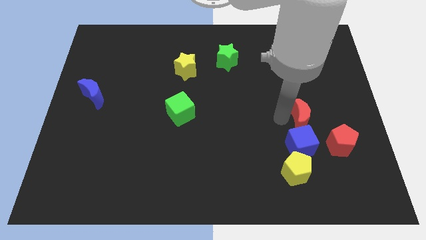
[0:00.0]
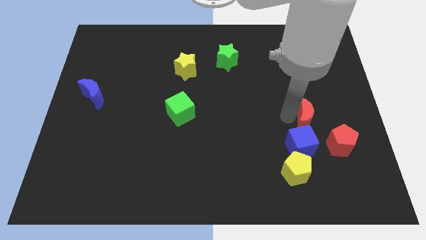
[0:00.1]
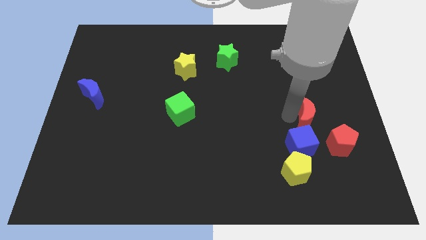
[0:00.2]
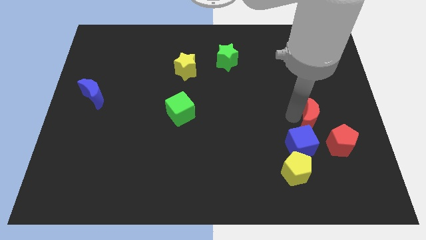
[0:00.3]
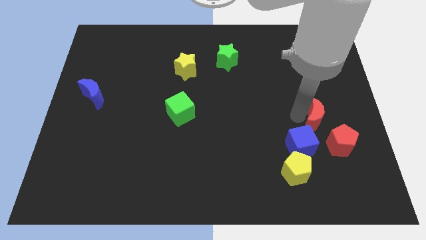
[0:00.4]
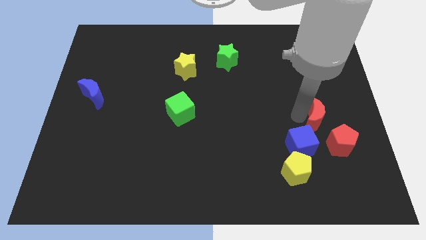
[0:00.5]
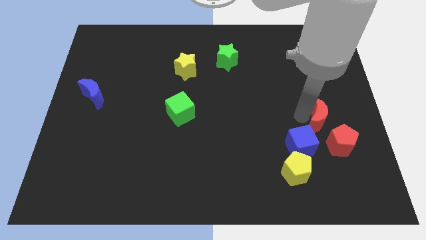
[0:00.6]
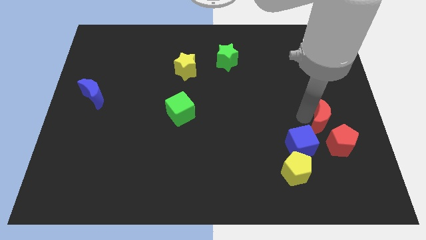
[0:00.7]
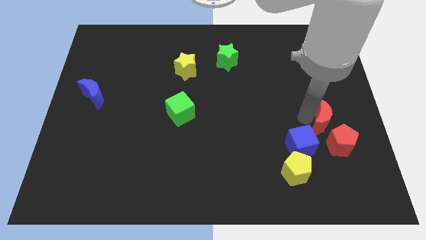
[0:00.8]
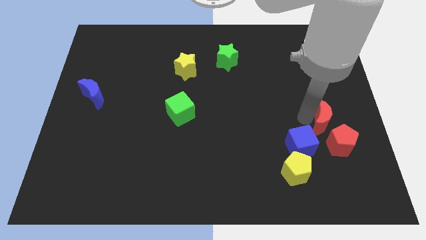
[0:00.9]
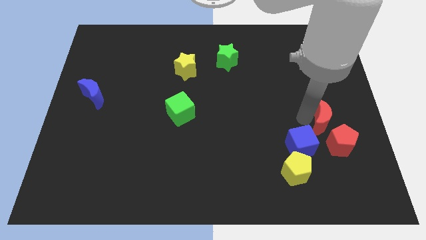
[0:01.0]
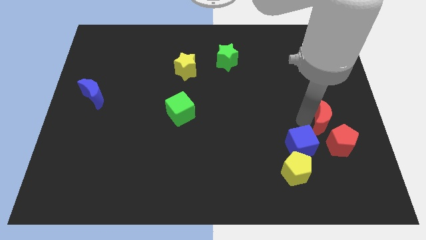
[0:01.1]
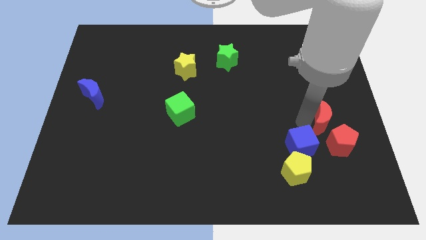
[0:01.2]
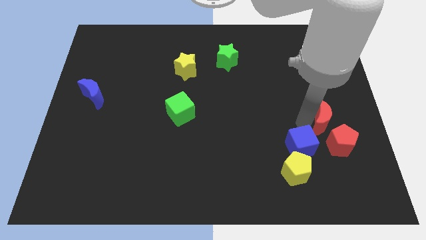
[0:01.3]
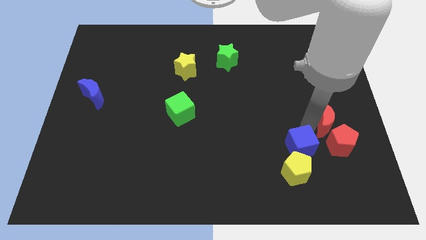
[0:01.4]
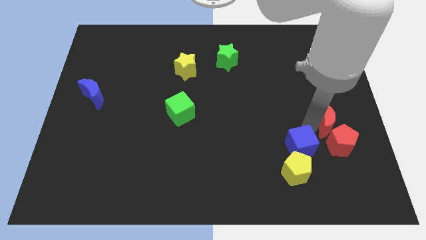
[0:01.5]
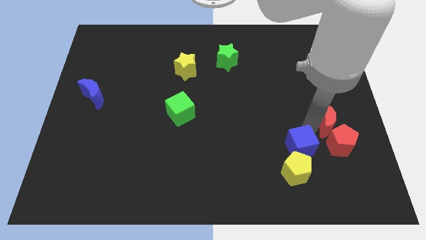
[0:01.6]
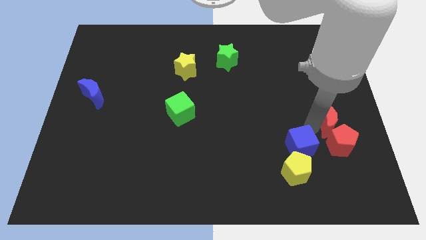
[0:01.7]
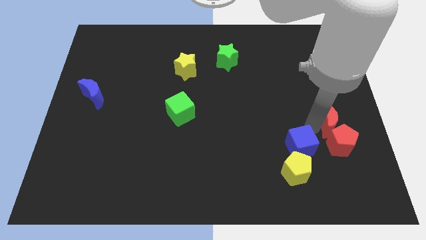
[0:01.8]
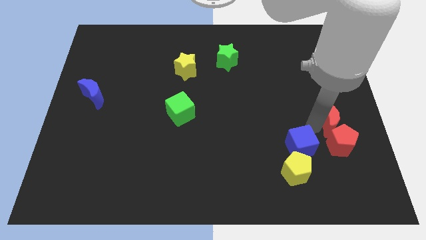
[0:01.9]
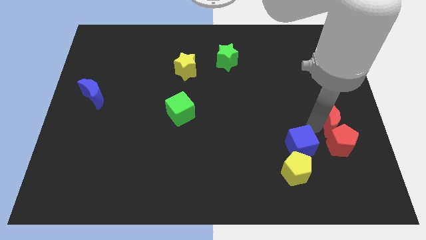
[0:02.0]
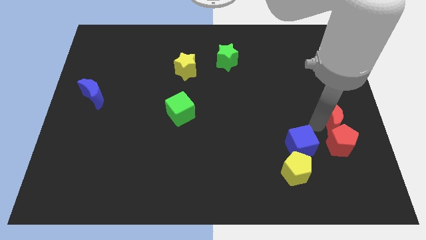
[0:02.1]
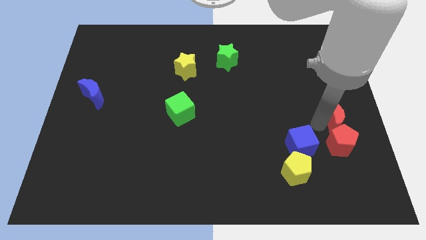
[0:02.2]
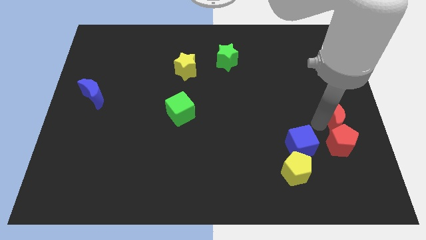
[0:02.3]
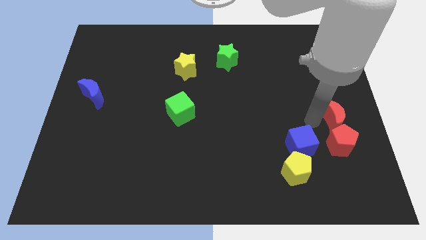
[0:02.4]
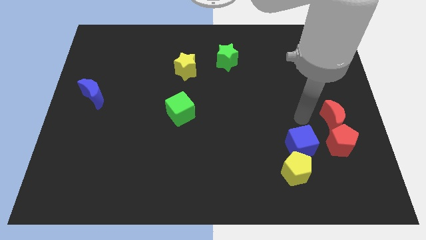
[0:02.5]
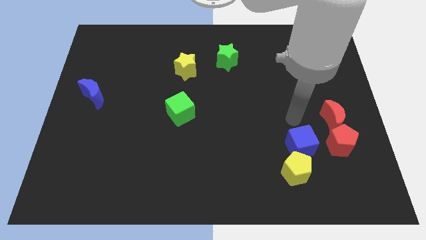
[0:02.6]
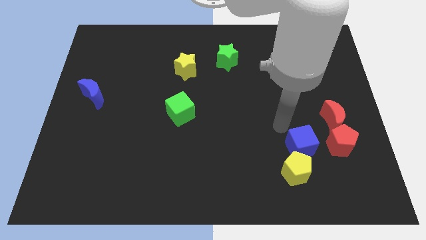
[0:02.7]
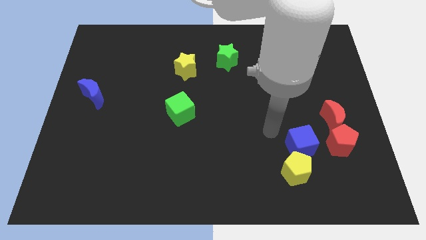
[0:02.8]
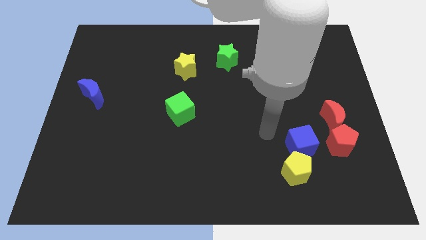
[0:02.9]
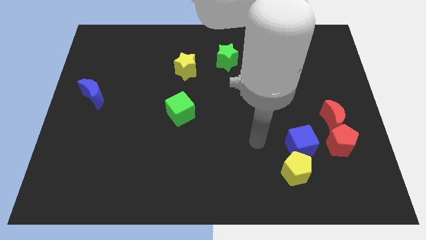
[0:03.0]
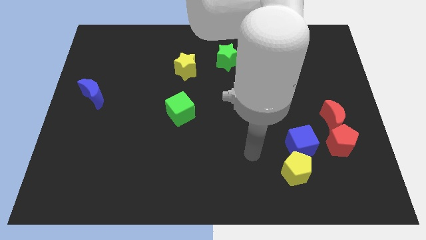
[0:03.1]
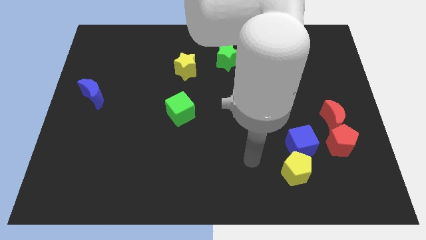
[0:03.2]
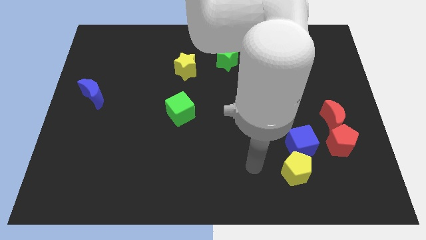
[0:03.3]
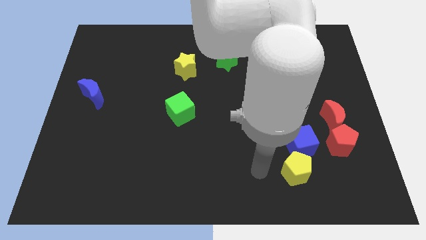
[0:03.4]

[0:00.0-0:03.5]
place the red crescent above the red pentagon

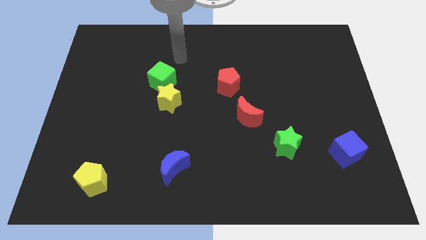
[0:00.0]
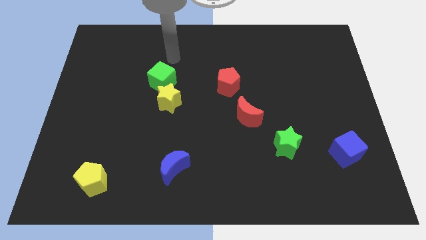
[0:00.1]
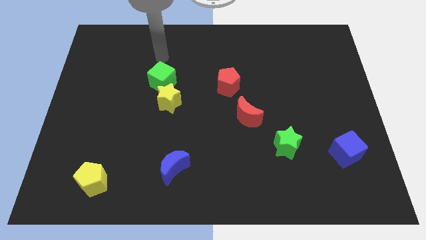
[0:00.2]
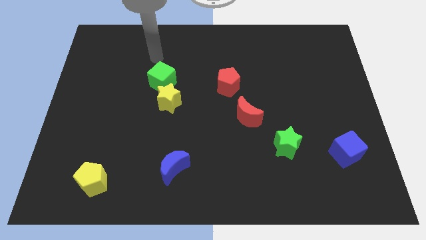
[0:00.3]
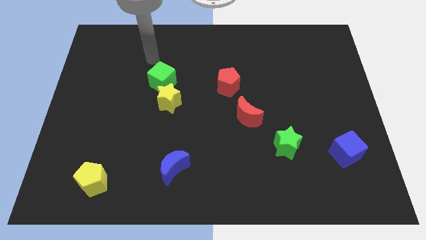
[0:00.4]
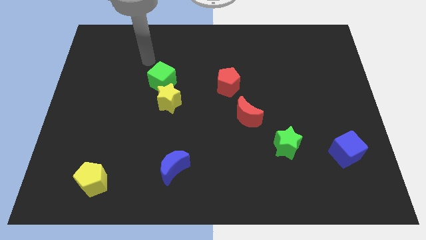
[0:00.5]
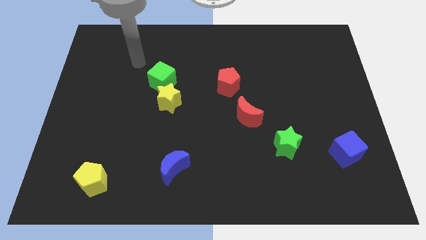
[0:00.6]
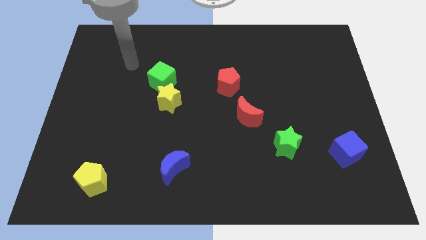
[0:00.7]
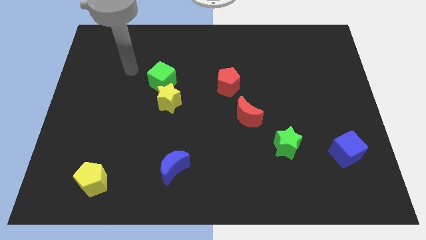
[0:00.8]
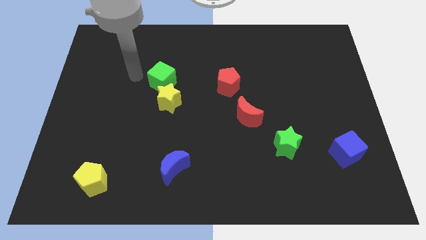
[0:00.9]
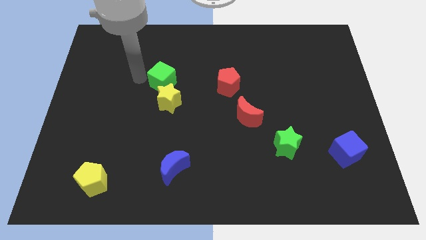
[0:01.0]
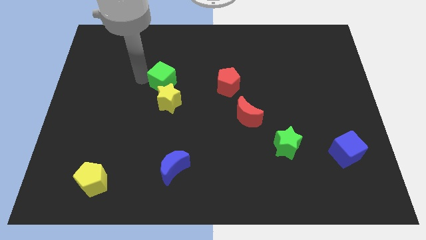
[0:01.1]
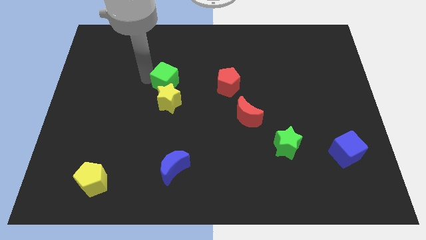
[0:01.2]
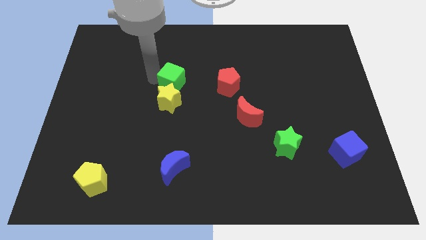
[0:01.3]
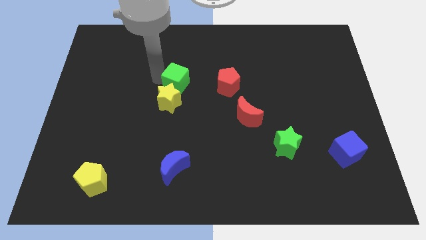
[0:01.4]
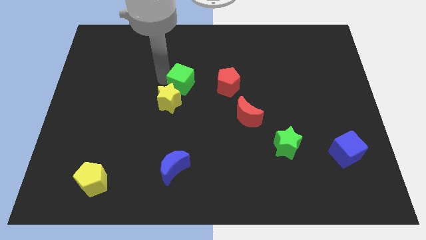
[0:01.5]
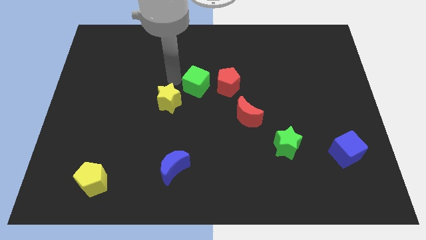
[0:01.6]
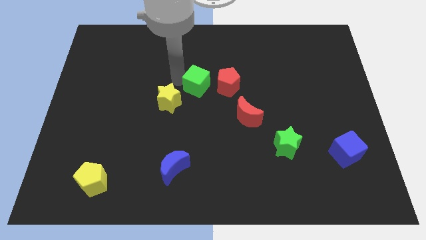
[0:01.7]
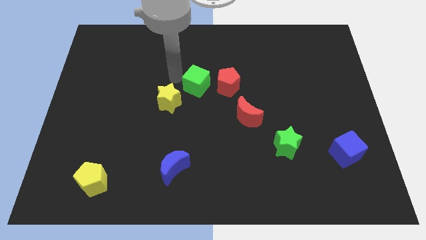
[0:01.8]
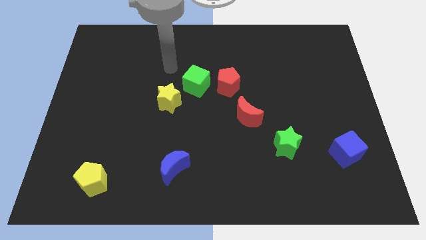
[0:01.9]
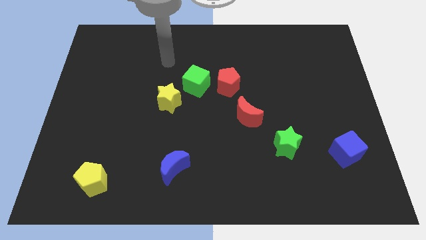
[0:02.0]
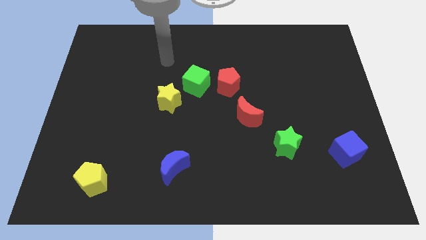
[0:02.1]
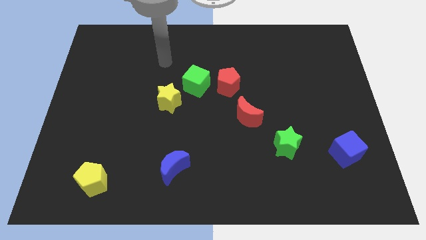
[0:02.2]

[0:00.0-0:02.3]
push the green cube left the red pentagon

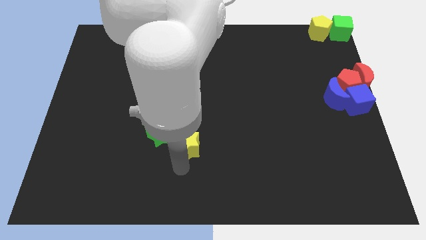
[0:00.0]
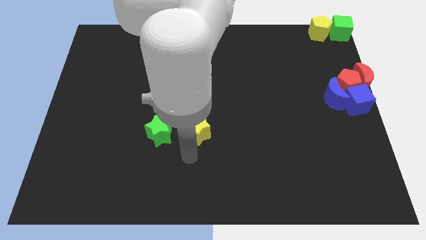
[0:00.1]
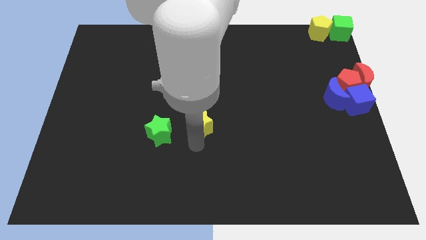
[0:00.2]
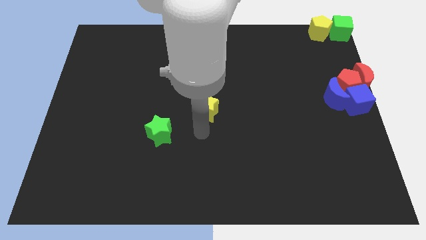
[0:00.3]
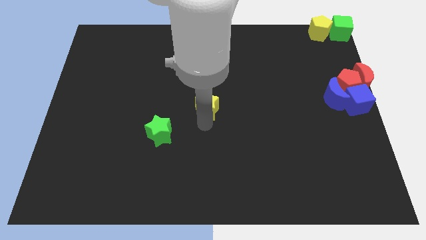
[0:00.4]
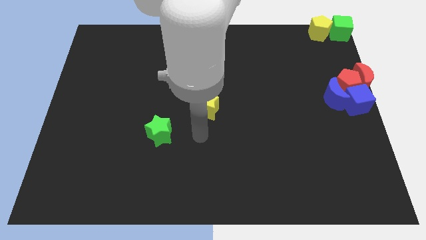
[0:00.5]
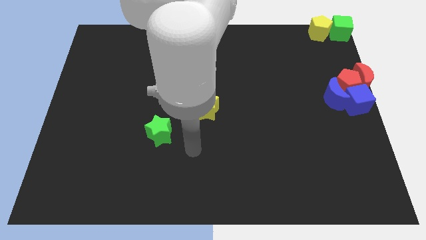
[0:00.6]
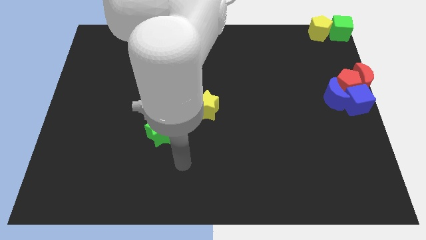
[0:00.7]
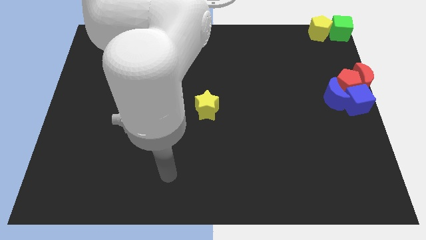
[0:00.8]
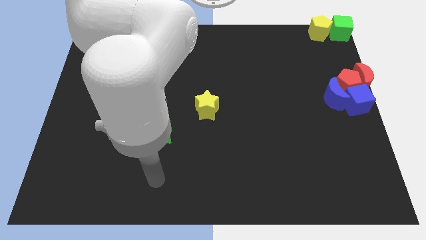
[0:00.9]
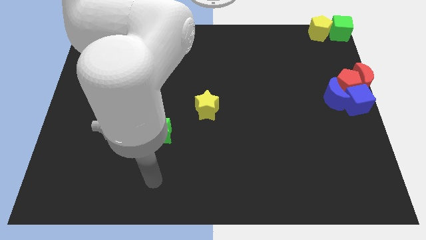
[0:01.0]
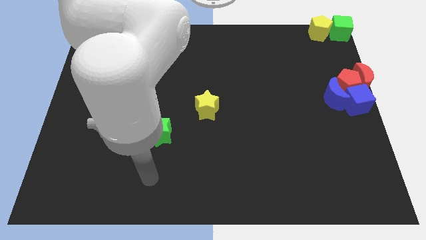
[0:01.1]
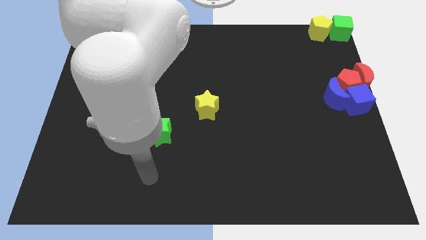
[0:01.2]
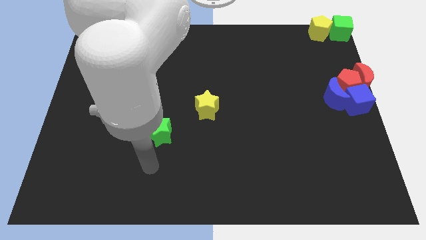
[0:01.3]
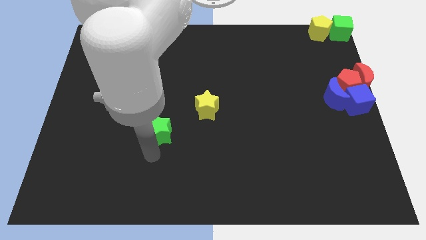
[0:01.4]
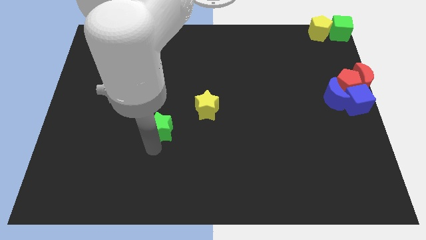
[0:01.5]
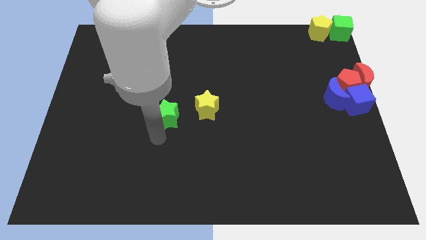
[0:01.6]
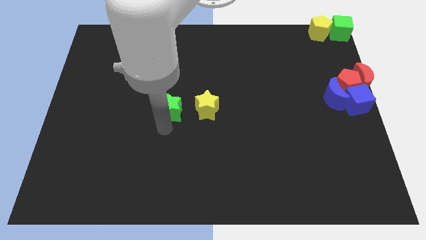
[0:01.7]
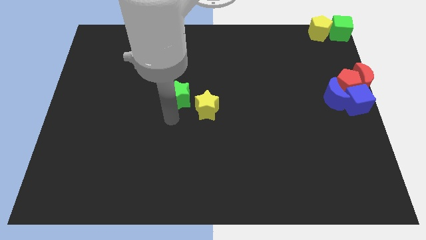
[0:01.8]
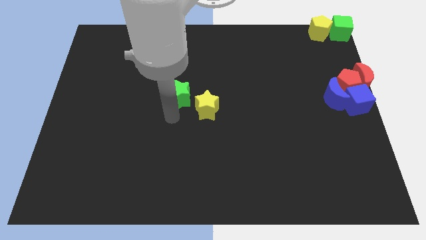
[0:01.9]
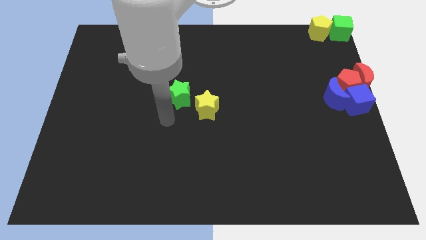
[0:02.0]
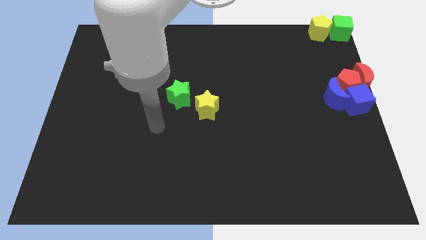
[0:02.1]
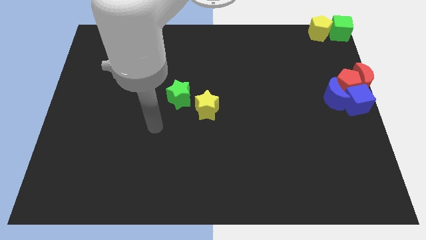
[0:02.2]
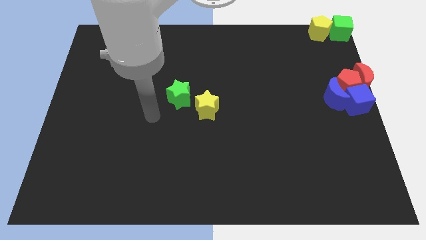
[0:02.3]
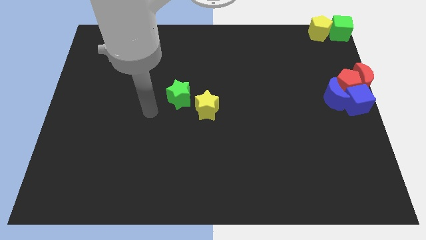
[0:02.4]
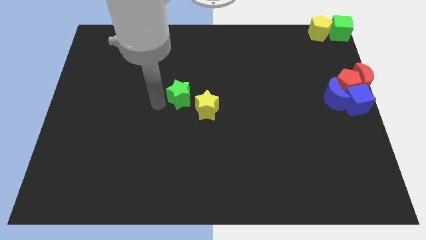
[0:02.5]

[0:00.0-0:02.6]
push the green and yellow star to the center

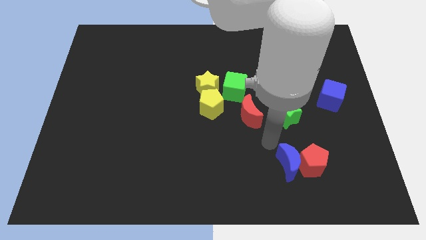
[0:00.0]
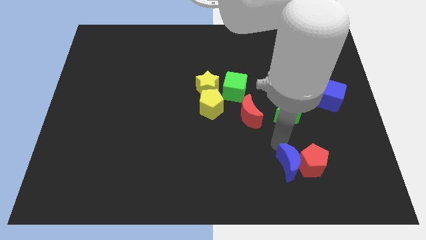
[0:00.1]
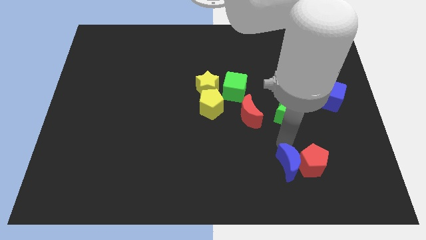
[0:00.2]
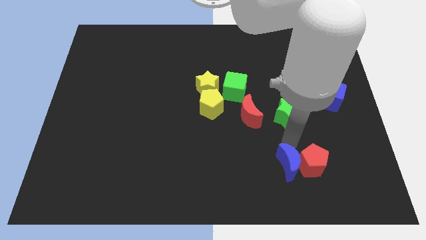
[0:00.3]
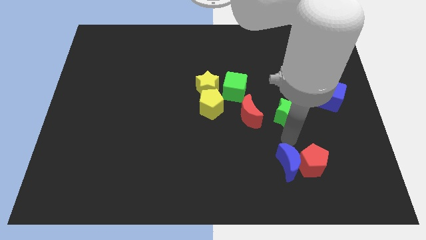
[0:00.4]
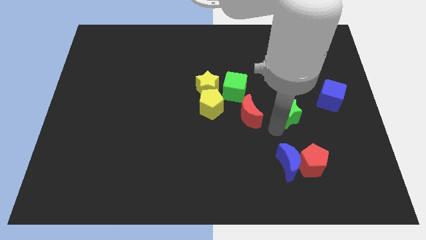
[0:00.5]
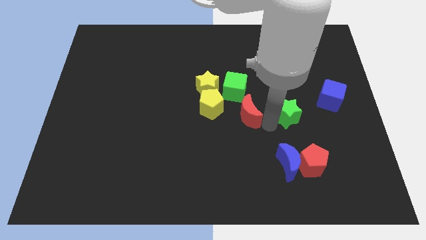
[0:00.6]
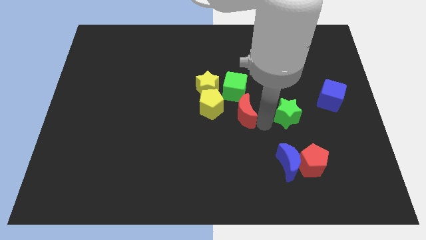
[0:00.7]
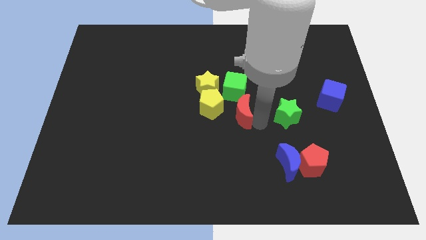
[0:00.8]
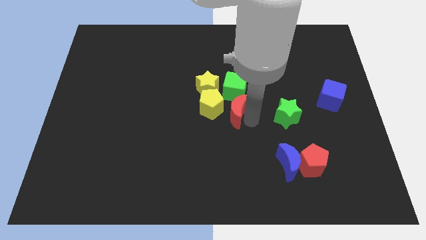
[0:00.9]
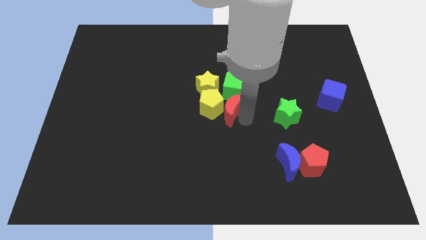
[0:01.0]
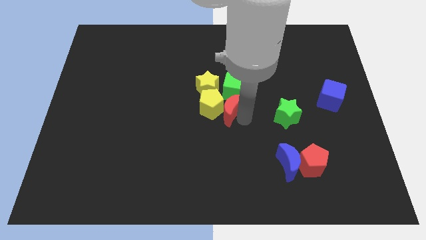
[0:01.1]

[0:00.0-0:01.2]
slightly push the red moon towards the yellow pentagon
